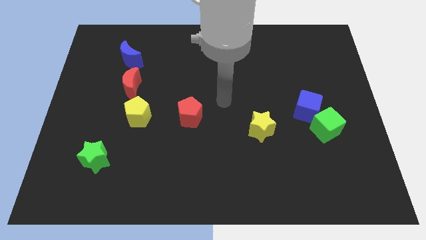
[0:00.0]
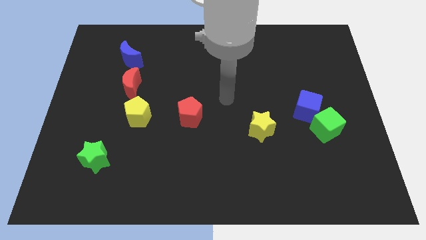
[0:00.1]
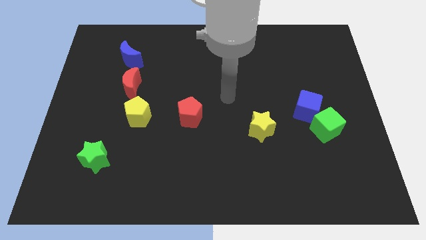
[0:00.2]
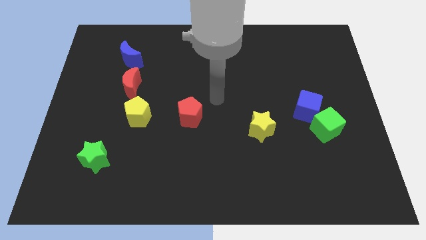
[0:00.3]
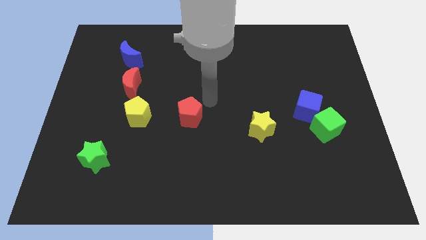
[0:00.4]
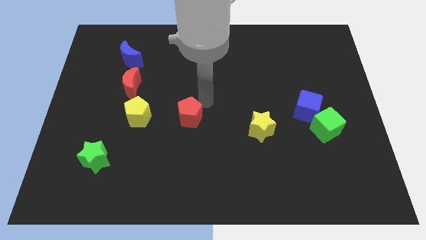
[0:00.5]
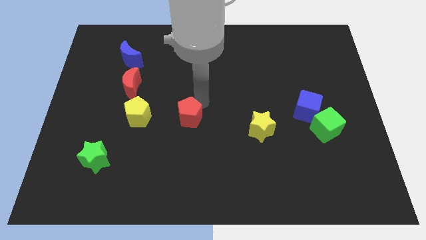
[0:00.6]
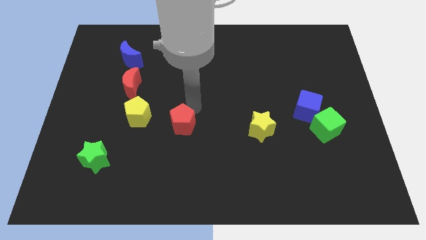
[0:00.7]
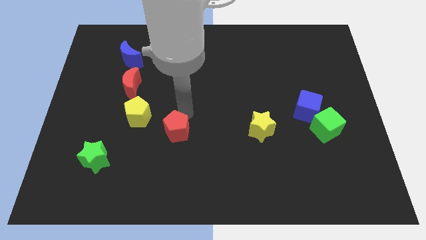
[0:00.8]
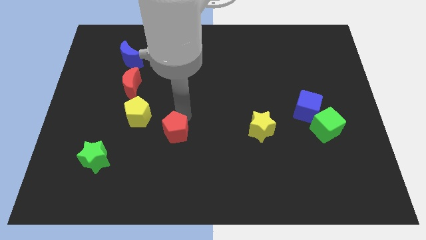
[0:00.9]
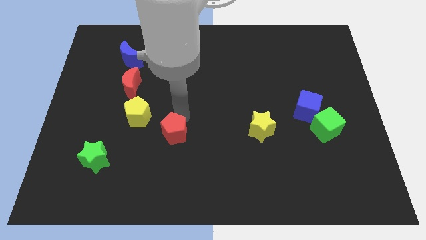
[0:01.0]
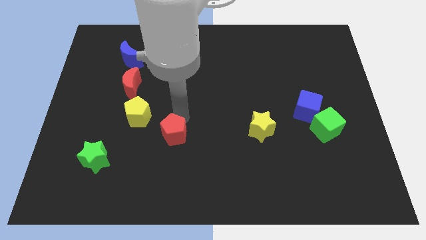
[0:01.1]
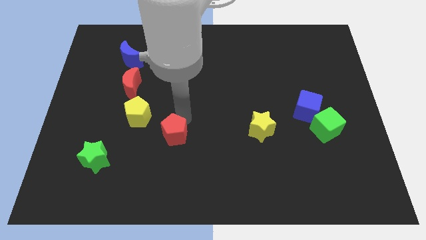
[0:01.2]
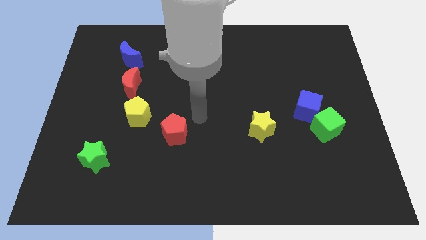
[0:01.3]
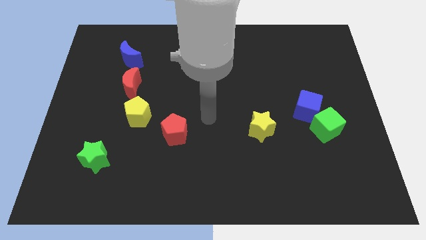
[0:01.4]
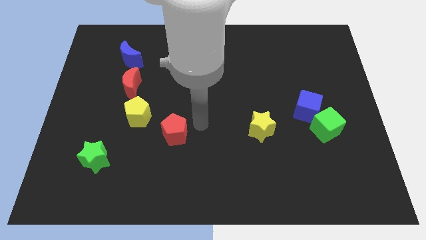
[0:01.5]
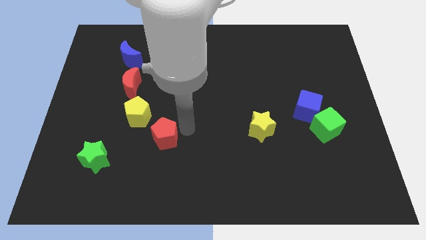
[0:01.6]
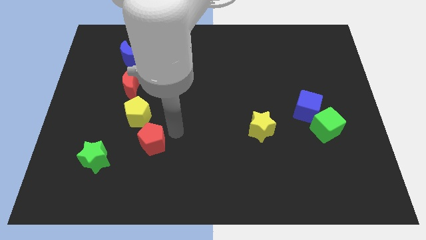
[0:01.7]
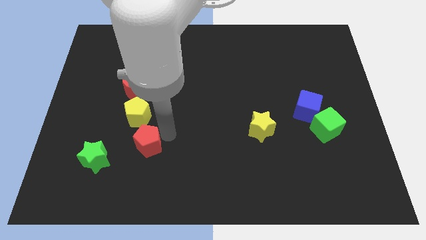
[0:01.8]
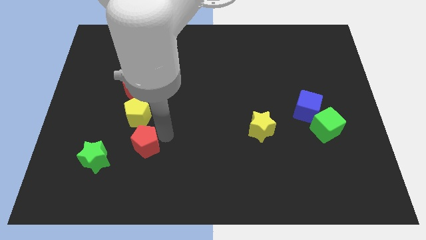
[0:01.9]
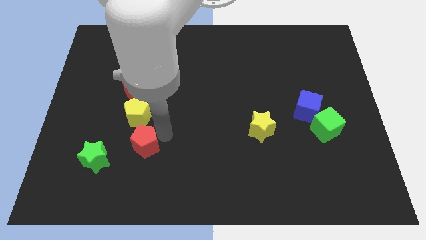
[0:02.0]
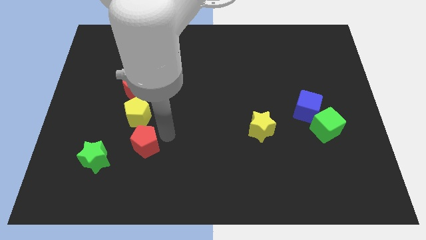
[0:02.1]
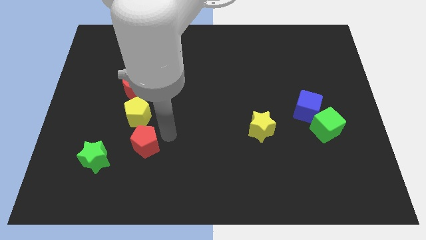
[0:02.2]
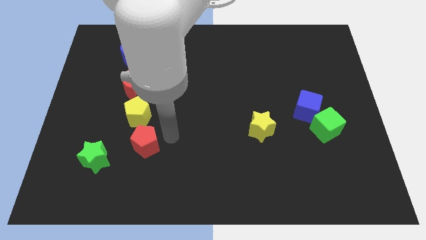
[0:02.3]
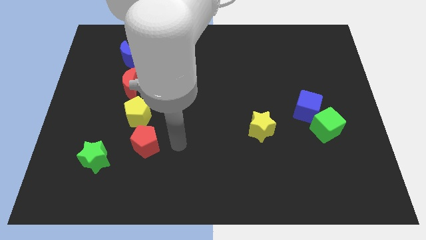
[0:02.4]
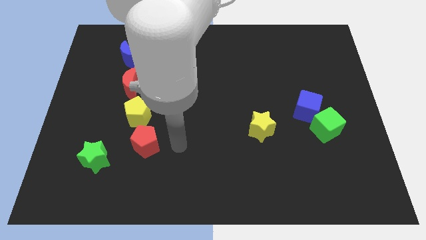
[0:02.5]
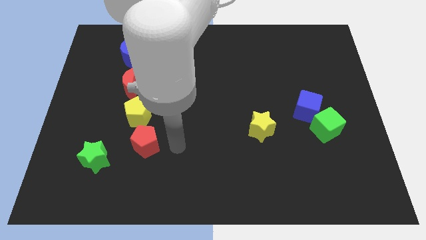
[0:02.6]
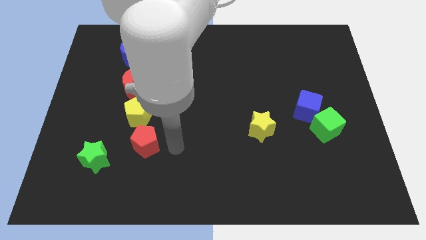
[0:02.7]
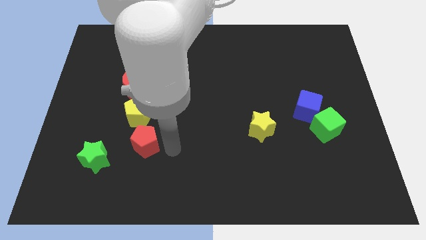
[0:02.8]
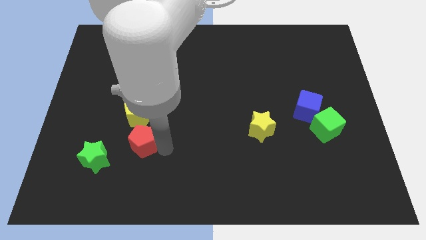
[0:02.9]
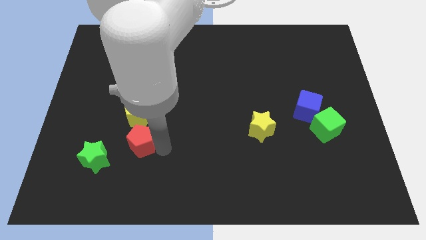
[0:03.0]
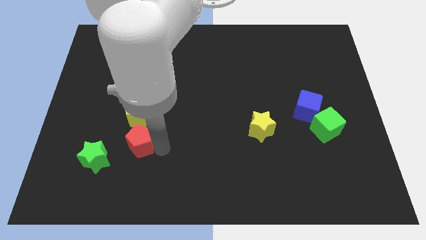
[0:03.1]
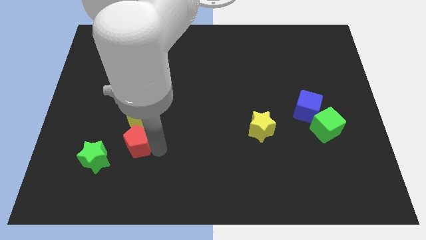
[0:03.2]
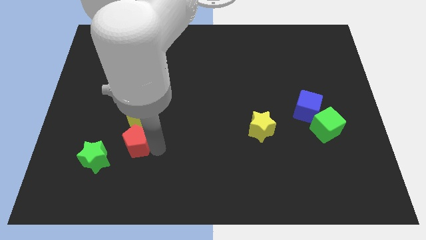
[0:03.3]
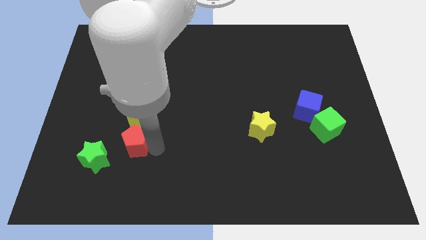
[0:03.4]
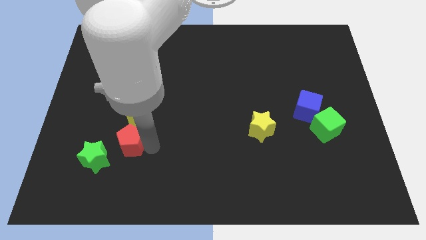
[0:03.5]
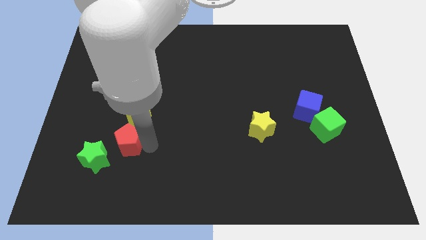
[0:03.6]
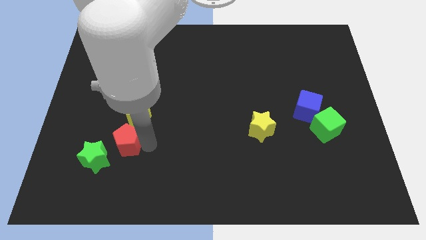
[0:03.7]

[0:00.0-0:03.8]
put red pentagon below yellow pentagon

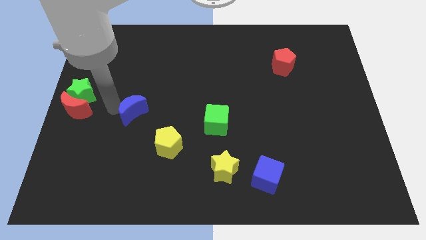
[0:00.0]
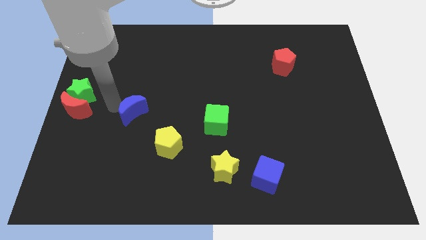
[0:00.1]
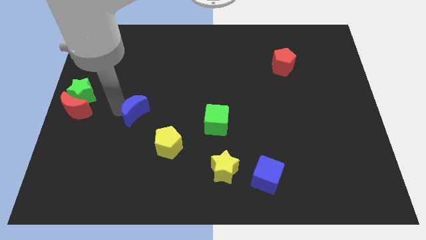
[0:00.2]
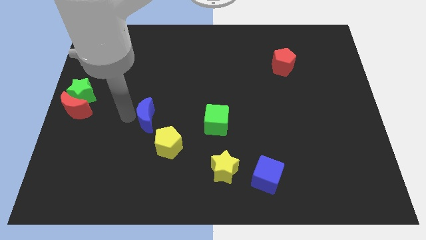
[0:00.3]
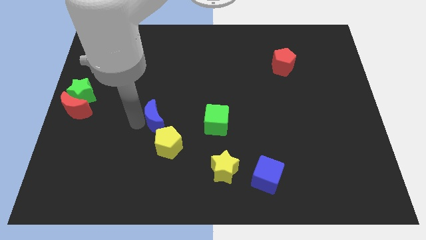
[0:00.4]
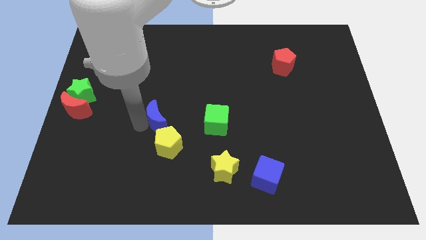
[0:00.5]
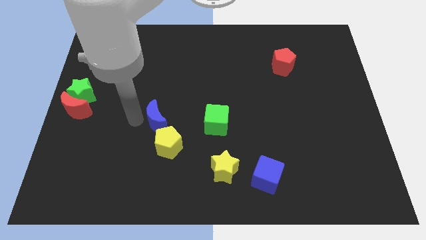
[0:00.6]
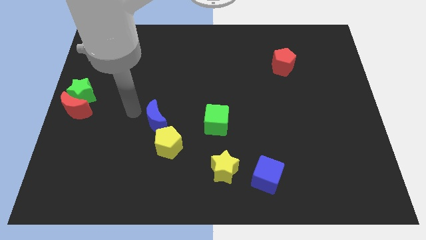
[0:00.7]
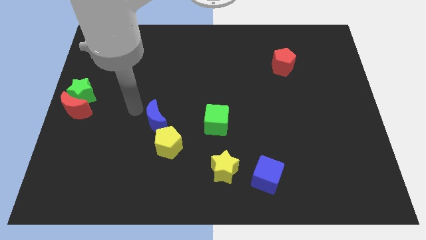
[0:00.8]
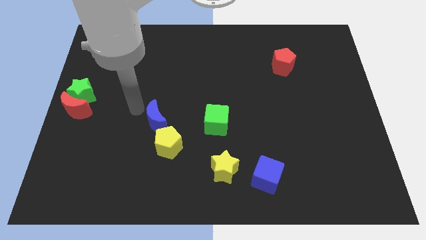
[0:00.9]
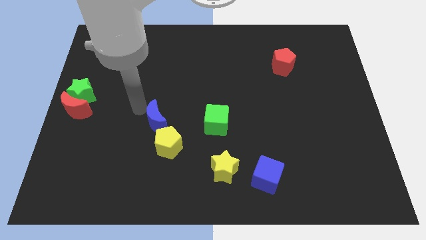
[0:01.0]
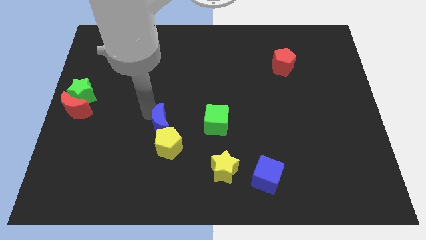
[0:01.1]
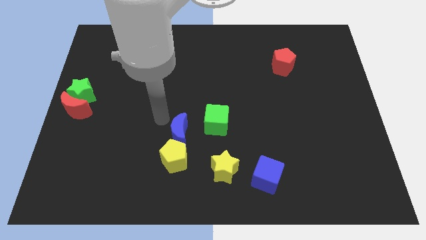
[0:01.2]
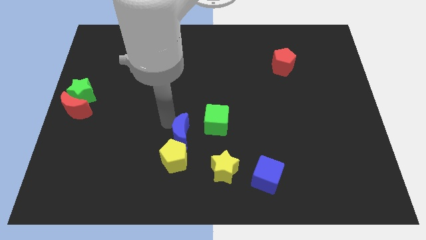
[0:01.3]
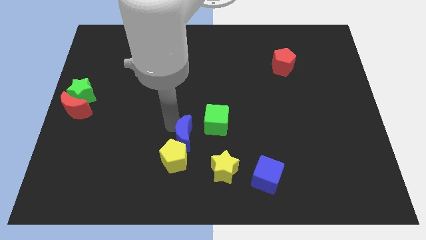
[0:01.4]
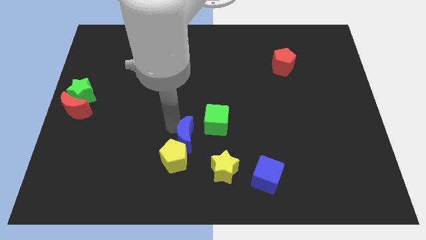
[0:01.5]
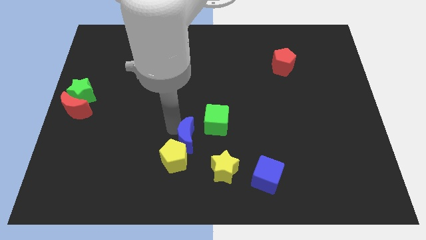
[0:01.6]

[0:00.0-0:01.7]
place the blue moon above the yellow pentagon

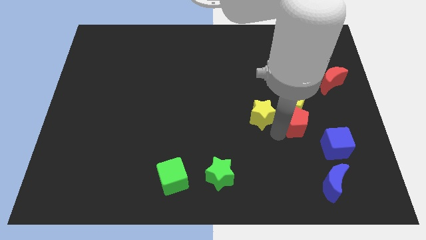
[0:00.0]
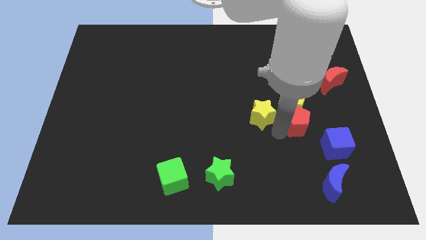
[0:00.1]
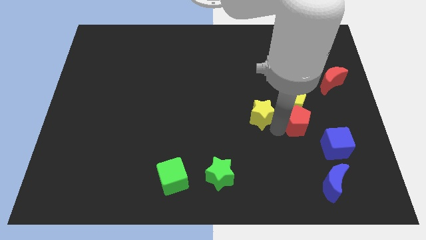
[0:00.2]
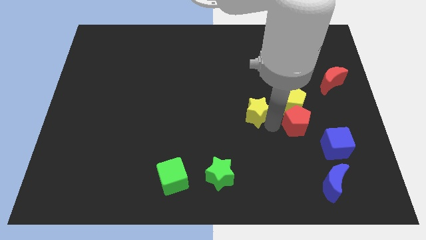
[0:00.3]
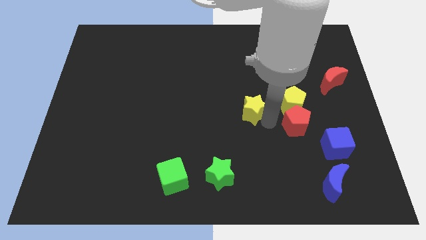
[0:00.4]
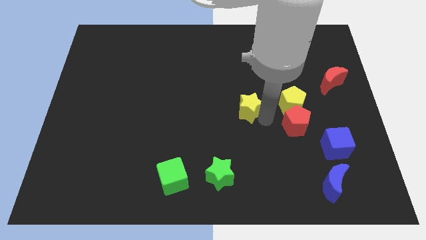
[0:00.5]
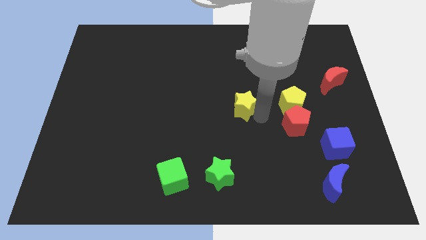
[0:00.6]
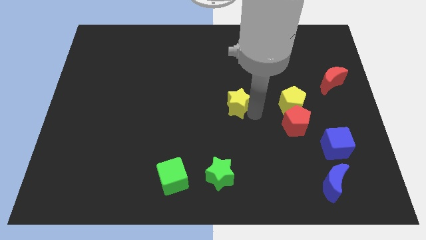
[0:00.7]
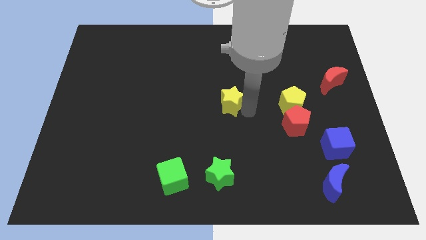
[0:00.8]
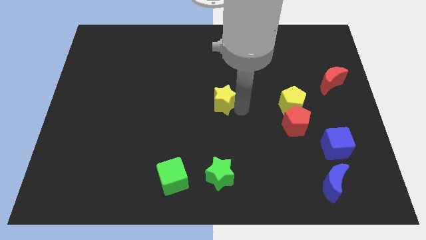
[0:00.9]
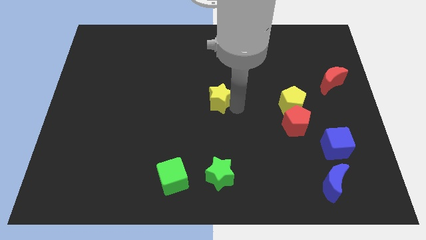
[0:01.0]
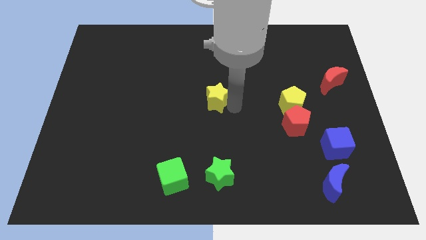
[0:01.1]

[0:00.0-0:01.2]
place the yellow star left to the yellow pentagon

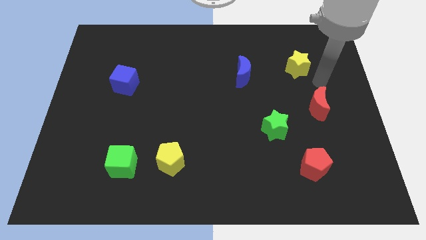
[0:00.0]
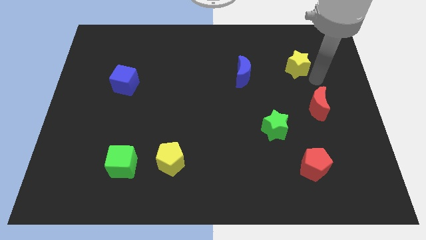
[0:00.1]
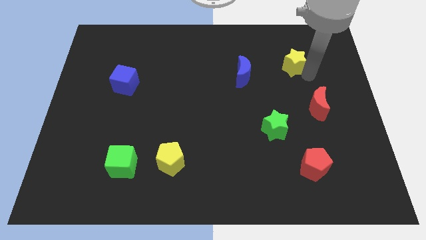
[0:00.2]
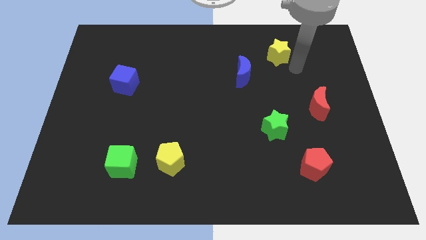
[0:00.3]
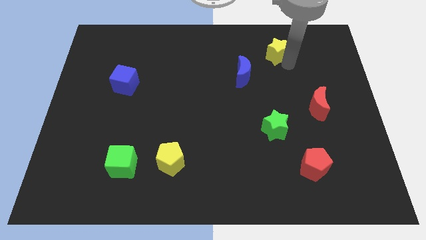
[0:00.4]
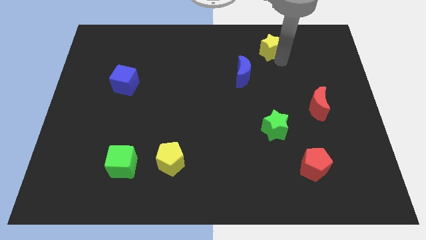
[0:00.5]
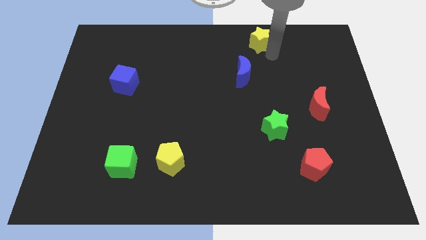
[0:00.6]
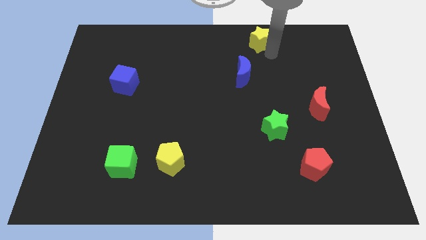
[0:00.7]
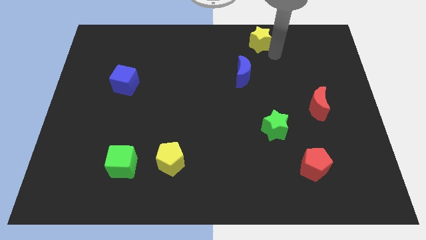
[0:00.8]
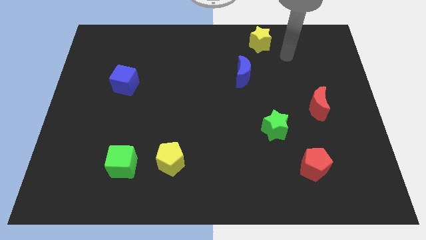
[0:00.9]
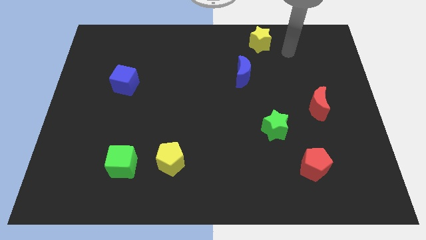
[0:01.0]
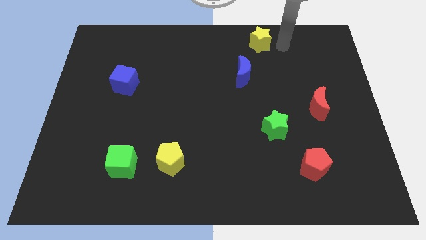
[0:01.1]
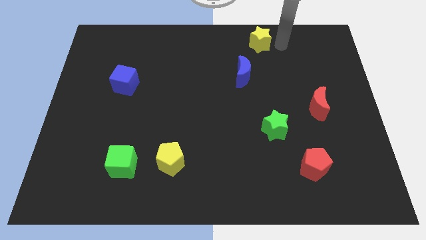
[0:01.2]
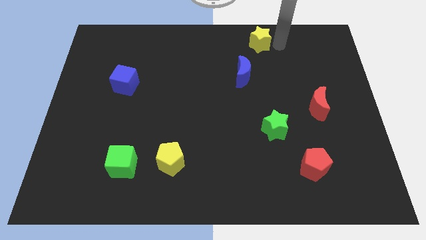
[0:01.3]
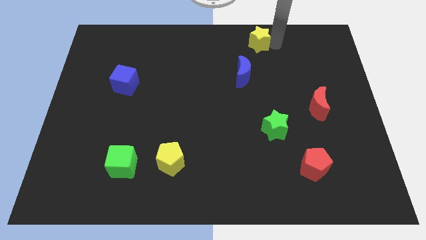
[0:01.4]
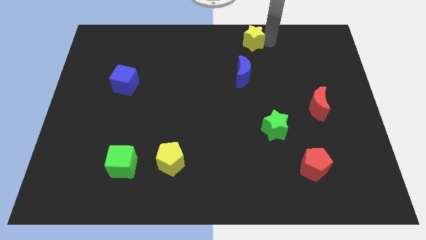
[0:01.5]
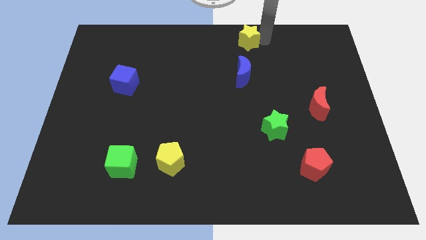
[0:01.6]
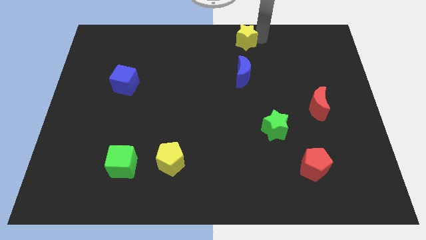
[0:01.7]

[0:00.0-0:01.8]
move the yellow star above the blue crescent

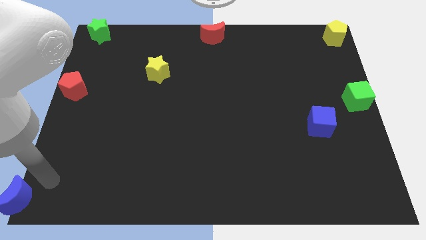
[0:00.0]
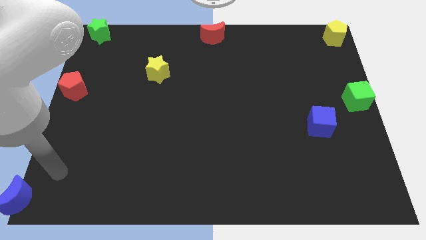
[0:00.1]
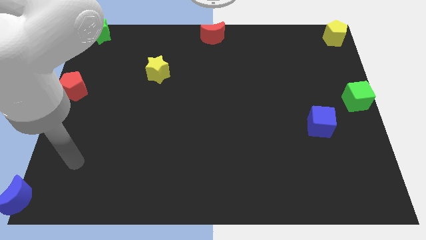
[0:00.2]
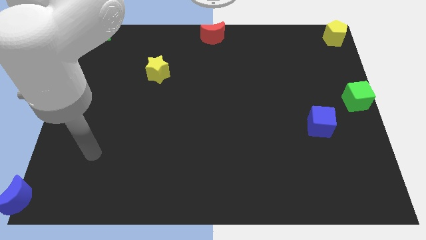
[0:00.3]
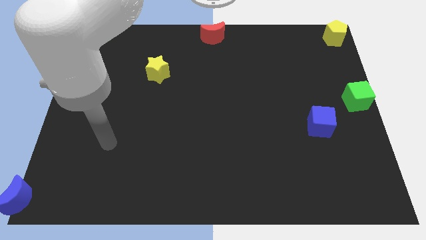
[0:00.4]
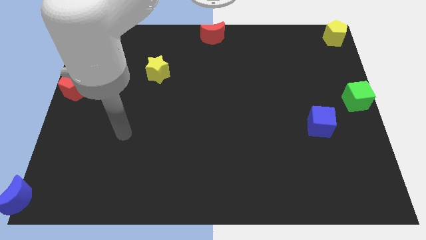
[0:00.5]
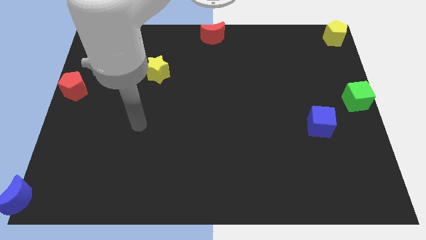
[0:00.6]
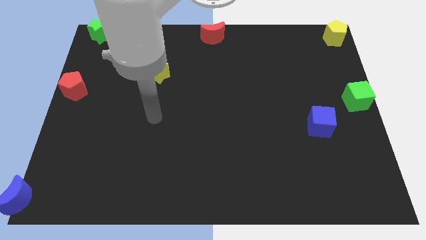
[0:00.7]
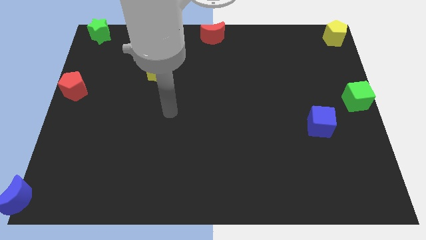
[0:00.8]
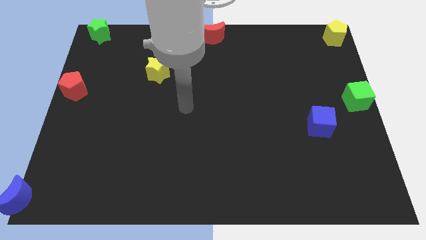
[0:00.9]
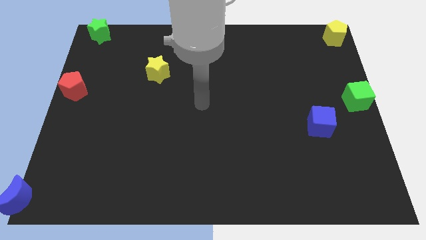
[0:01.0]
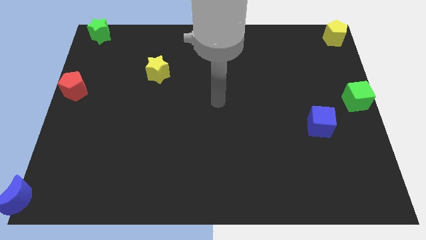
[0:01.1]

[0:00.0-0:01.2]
move the arm away from the blue moon
